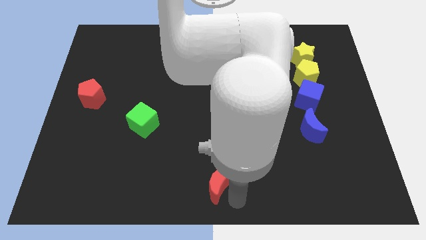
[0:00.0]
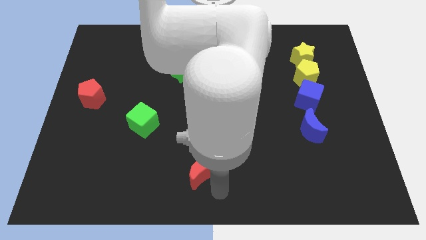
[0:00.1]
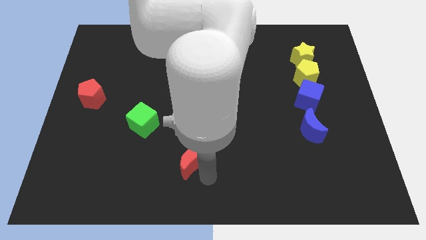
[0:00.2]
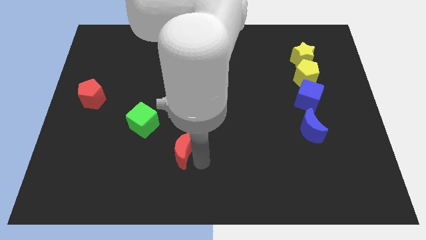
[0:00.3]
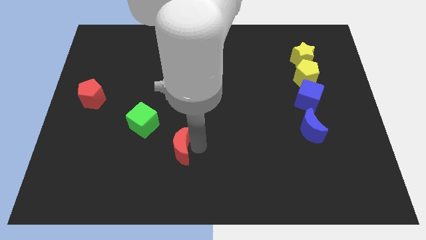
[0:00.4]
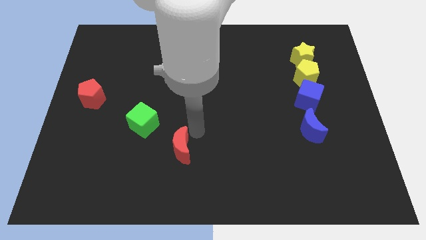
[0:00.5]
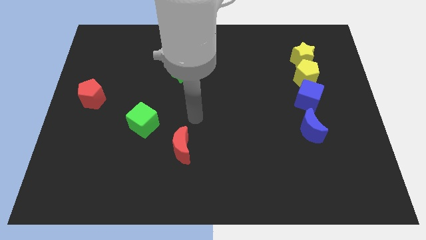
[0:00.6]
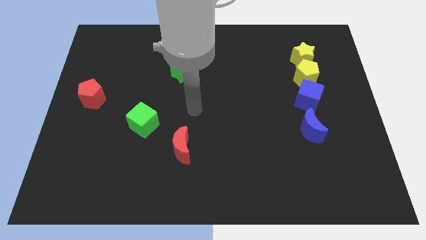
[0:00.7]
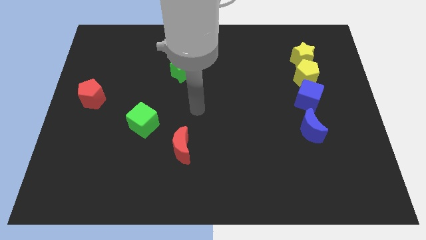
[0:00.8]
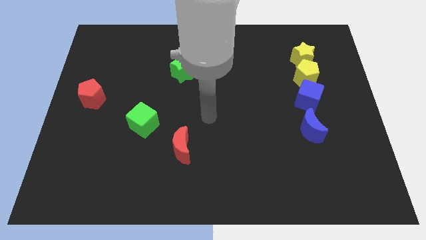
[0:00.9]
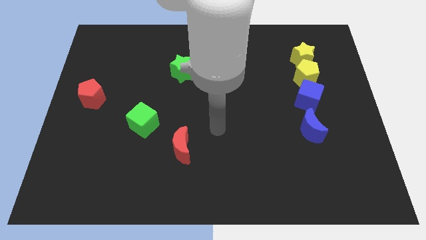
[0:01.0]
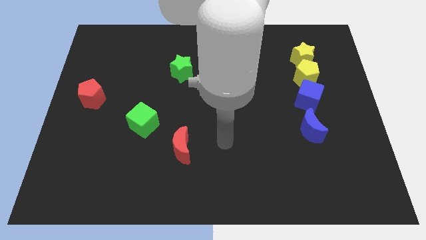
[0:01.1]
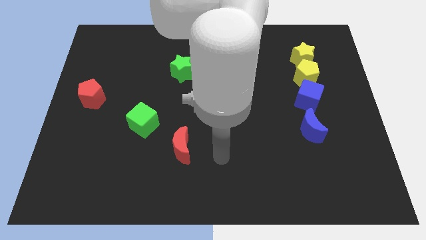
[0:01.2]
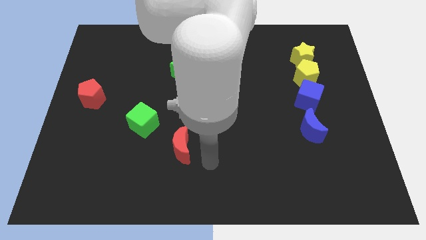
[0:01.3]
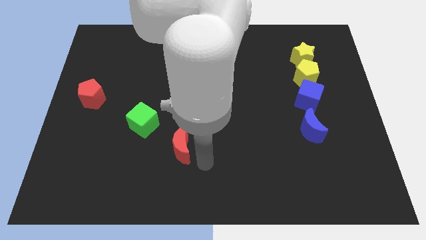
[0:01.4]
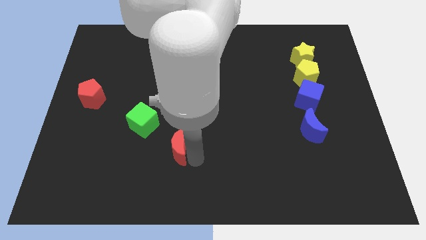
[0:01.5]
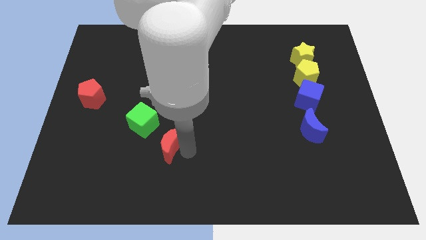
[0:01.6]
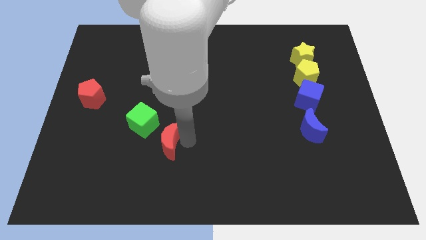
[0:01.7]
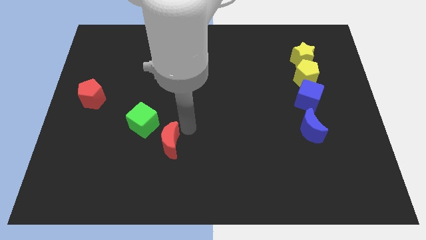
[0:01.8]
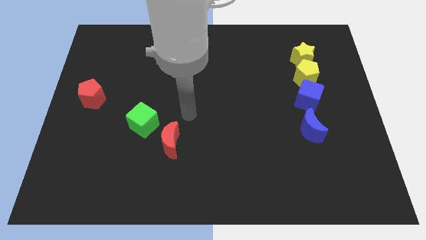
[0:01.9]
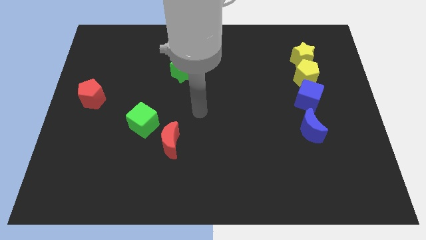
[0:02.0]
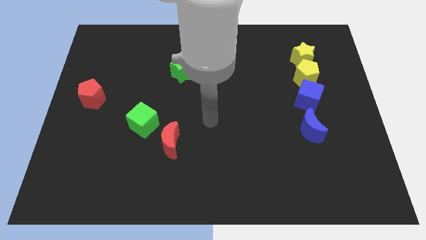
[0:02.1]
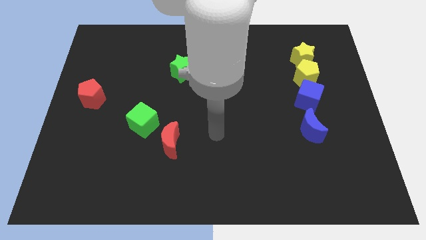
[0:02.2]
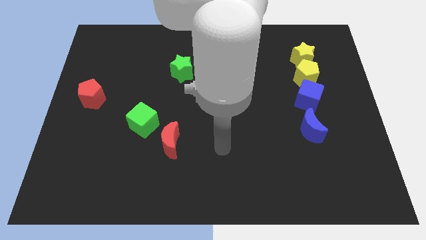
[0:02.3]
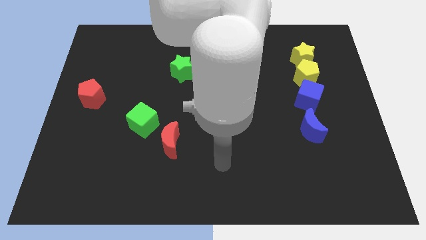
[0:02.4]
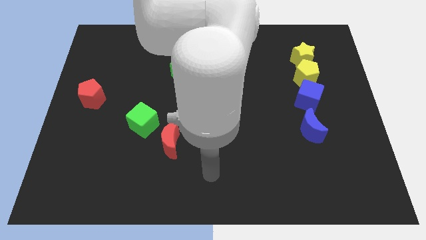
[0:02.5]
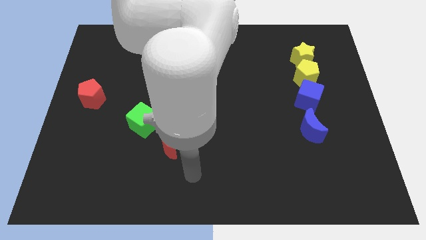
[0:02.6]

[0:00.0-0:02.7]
drag the red moon and place it next to the green cube

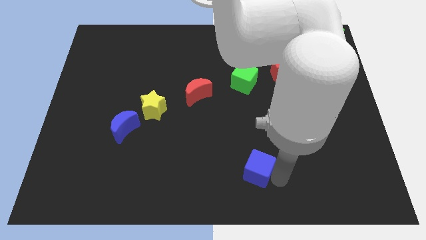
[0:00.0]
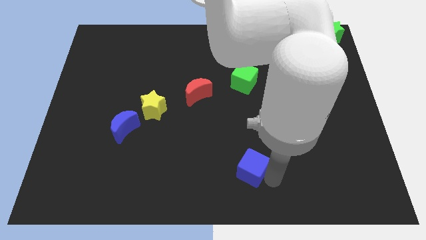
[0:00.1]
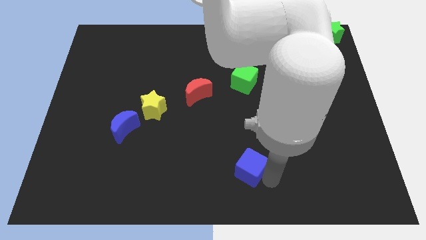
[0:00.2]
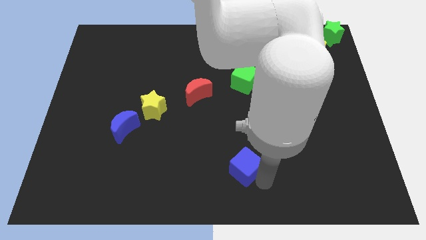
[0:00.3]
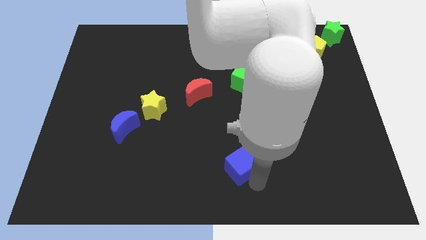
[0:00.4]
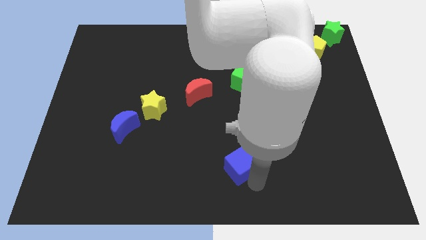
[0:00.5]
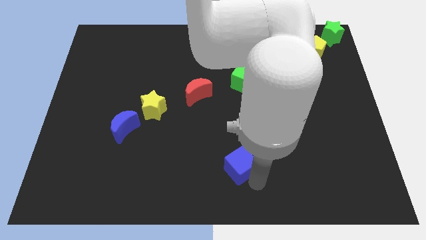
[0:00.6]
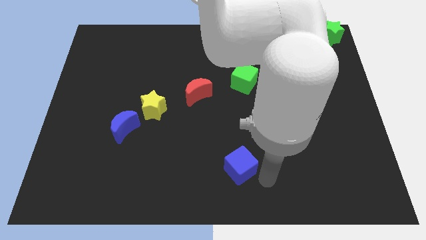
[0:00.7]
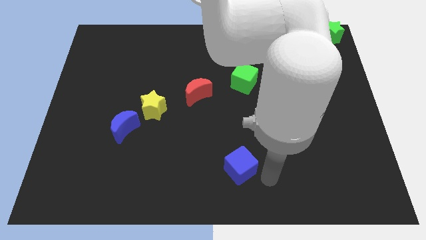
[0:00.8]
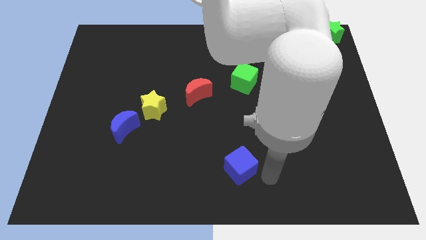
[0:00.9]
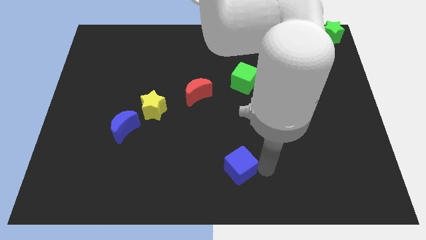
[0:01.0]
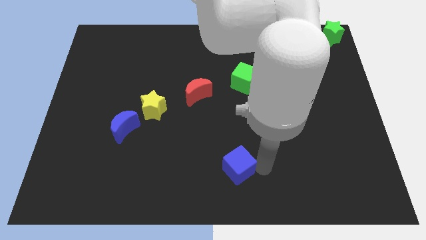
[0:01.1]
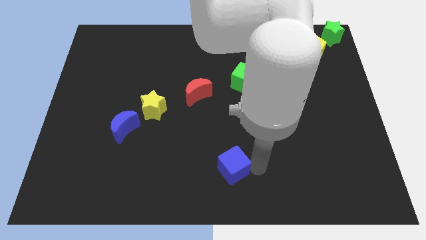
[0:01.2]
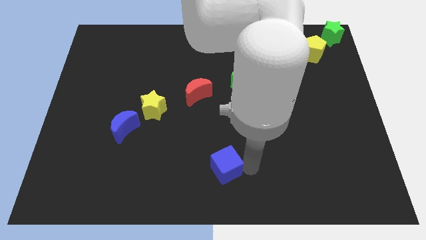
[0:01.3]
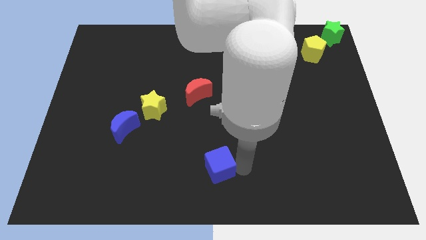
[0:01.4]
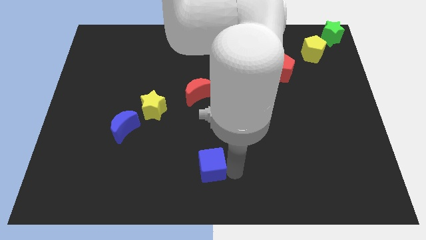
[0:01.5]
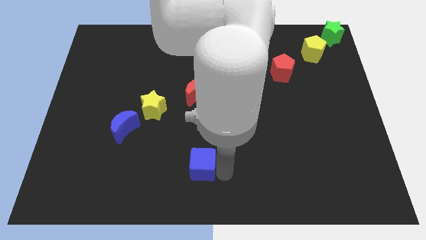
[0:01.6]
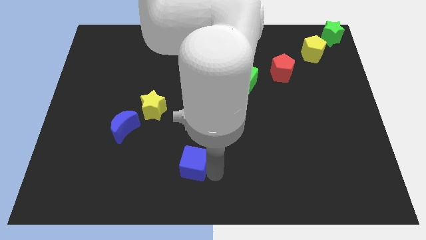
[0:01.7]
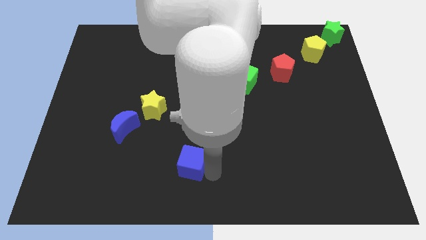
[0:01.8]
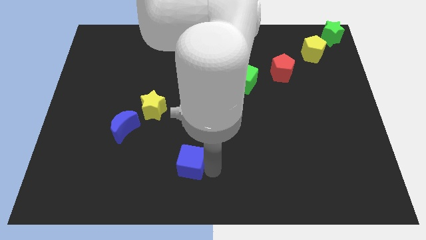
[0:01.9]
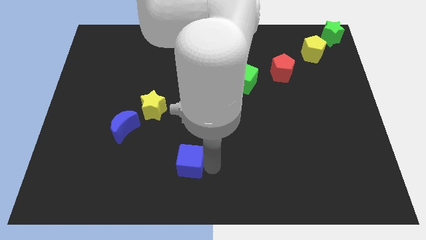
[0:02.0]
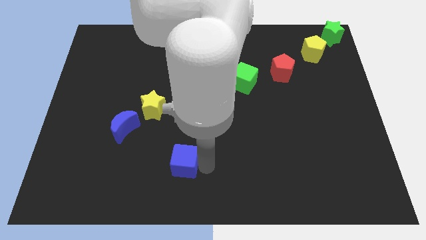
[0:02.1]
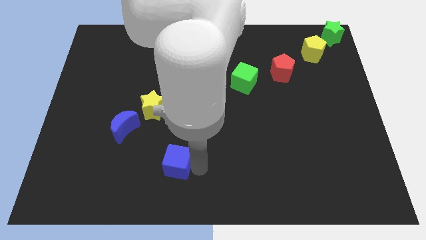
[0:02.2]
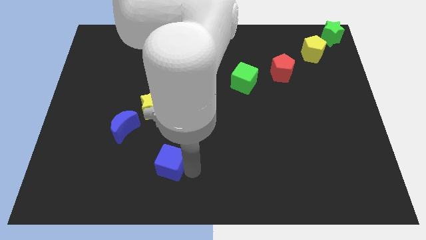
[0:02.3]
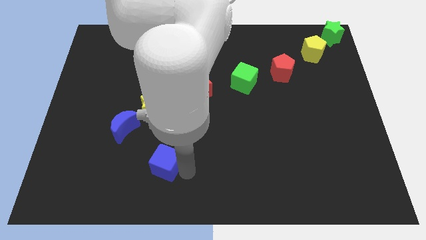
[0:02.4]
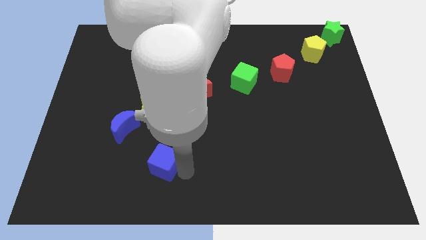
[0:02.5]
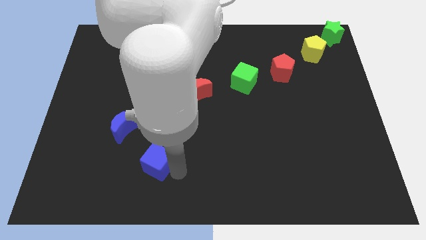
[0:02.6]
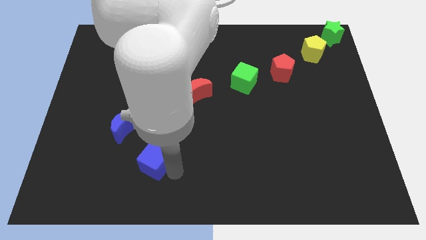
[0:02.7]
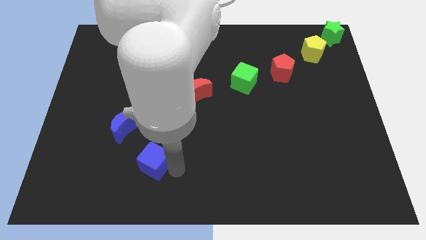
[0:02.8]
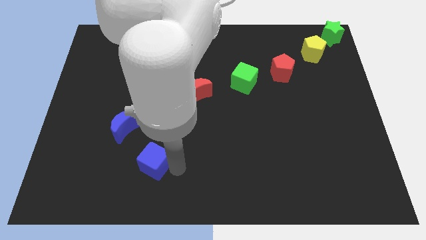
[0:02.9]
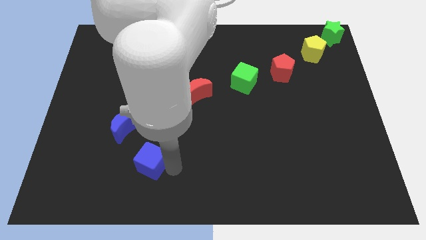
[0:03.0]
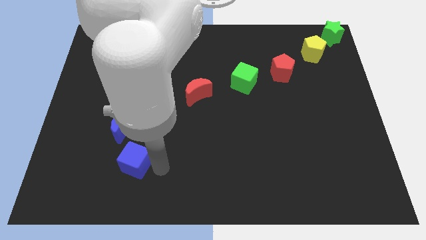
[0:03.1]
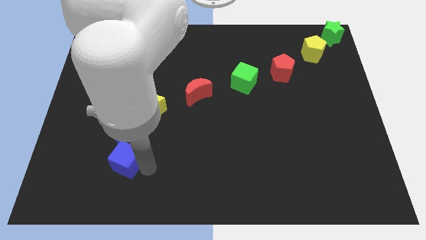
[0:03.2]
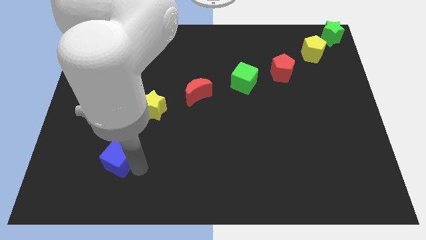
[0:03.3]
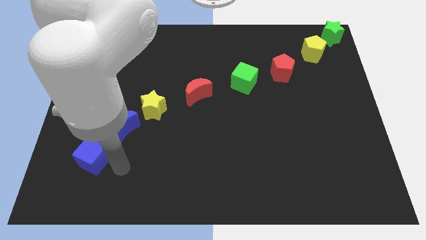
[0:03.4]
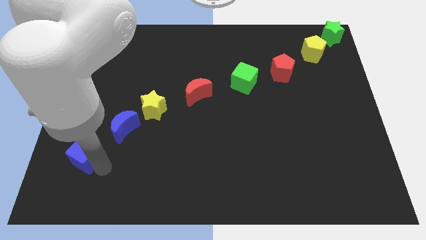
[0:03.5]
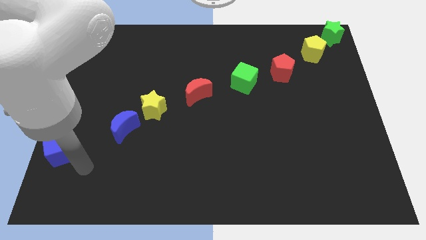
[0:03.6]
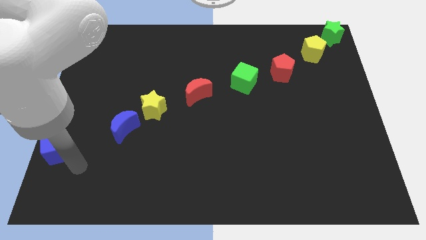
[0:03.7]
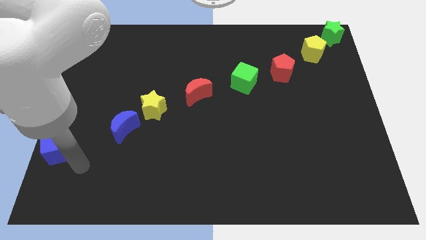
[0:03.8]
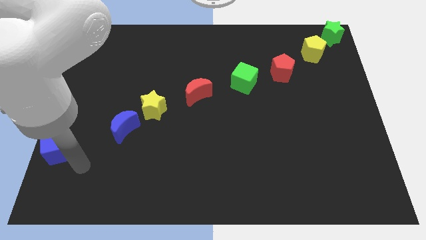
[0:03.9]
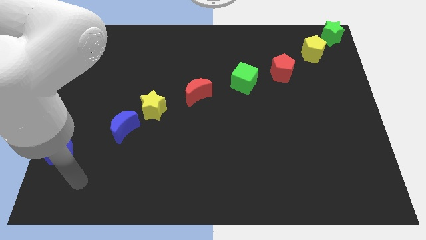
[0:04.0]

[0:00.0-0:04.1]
move the blue cube to the center left

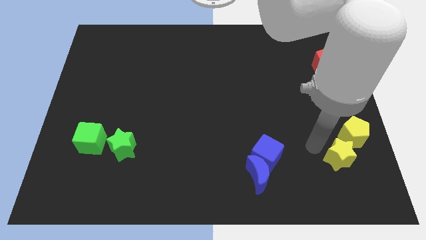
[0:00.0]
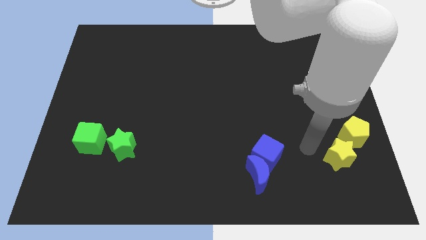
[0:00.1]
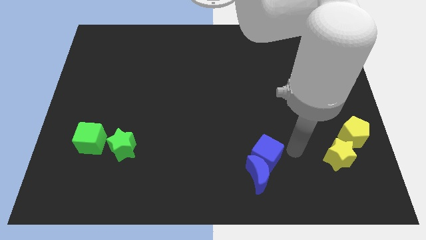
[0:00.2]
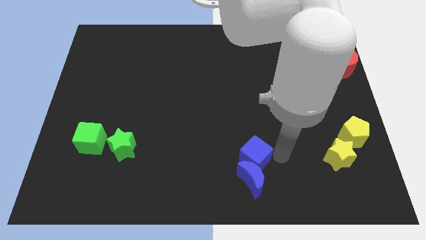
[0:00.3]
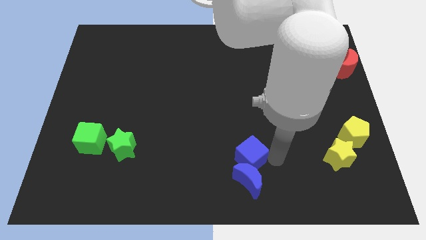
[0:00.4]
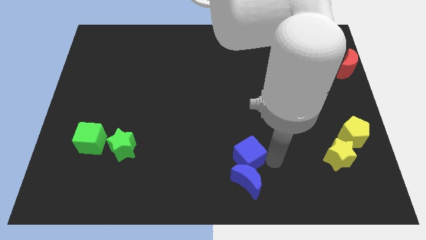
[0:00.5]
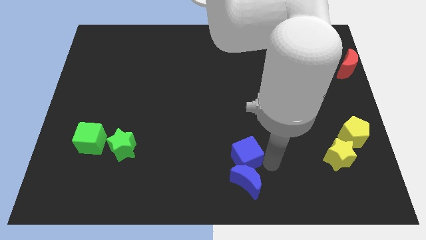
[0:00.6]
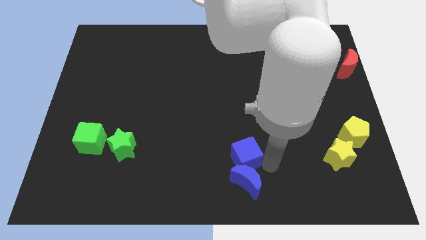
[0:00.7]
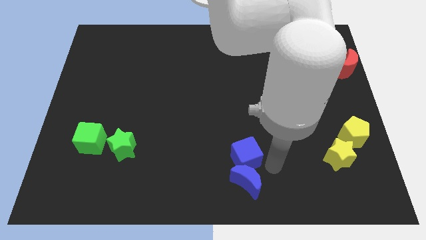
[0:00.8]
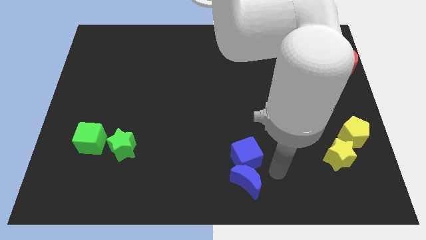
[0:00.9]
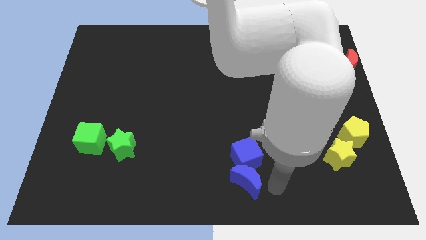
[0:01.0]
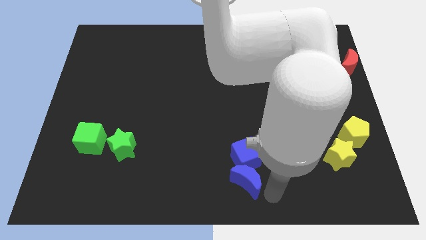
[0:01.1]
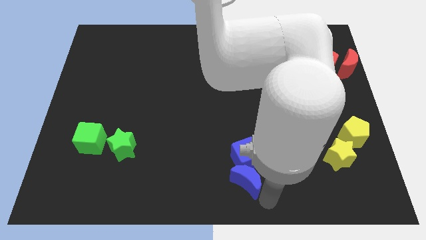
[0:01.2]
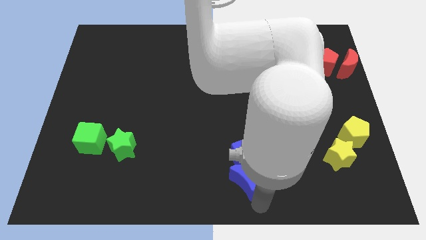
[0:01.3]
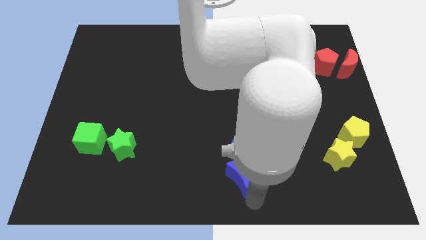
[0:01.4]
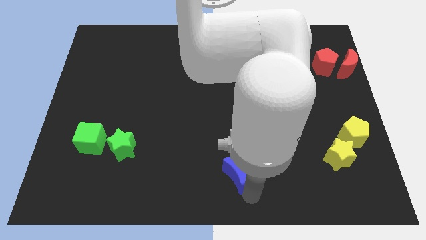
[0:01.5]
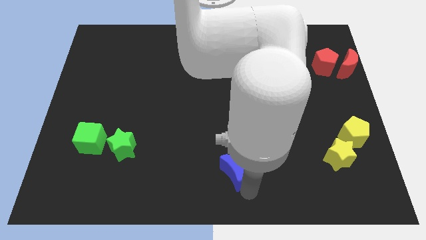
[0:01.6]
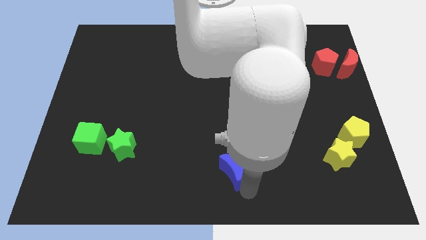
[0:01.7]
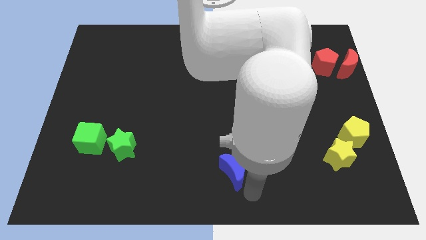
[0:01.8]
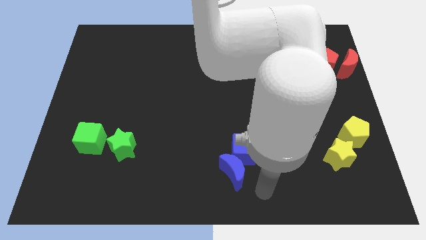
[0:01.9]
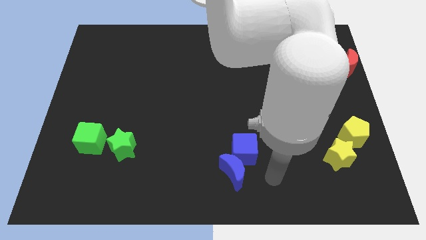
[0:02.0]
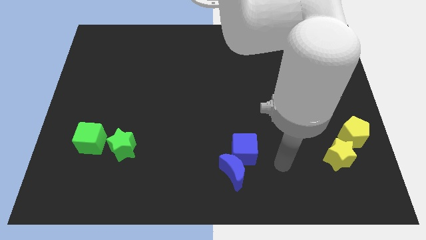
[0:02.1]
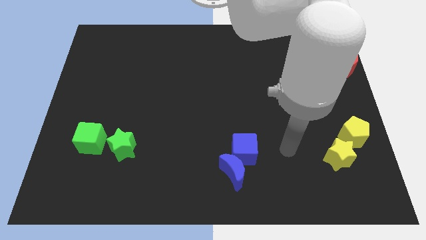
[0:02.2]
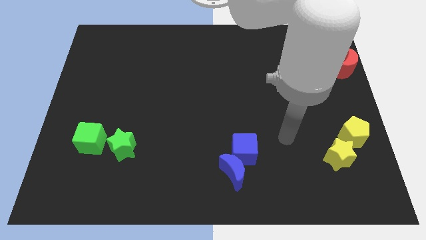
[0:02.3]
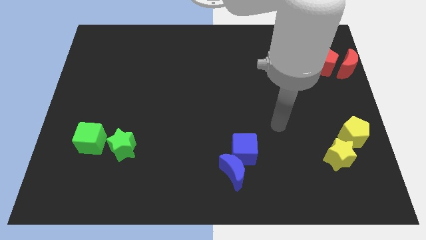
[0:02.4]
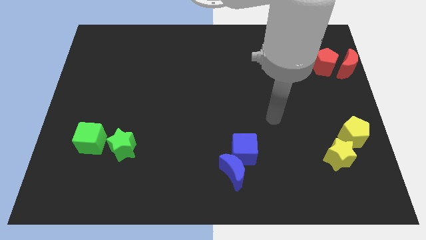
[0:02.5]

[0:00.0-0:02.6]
place blue moon to the bottom left of blue cube
